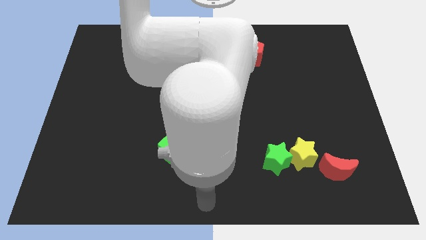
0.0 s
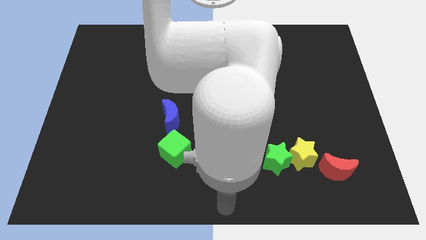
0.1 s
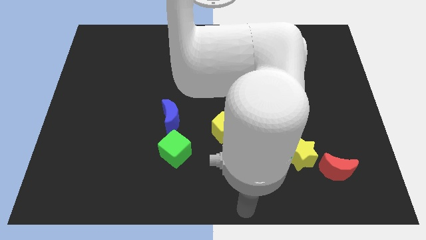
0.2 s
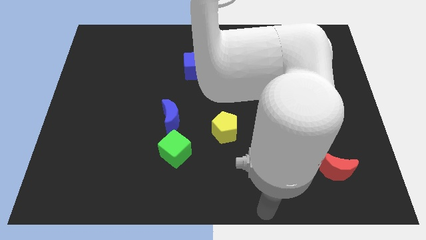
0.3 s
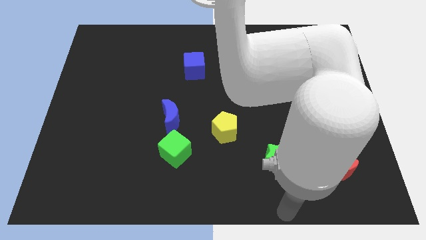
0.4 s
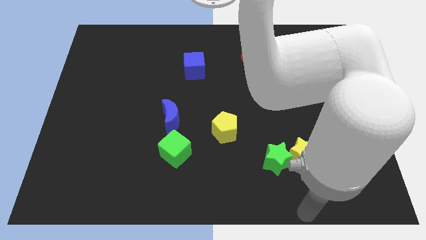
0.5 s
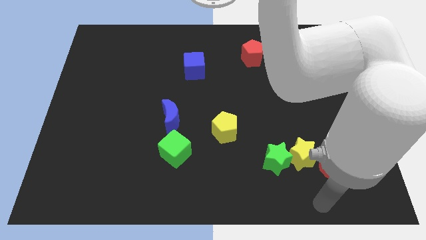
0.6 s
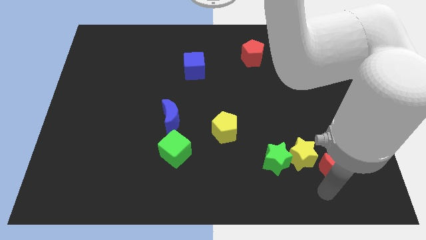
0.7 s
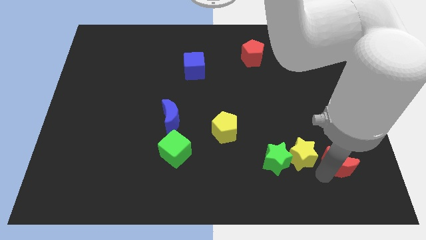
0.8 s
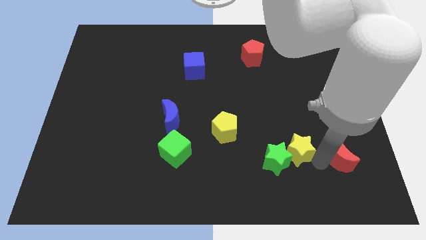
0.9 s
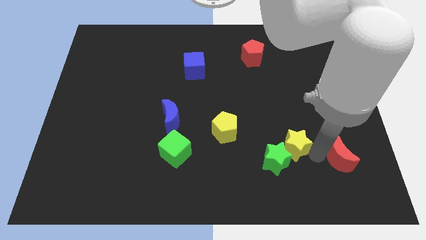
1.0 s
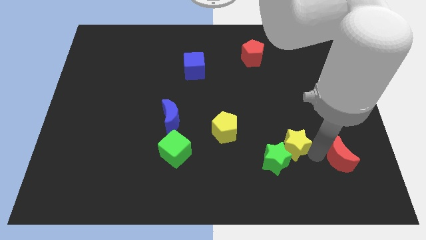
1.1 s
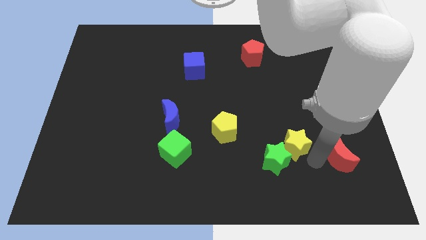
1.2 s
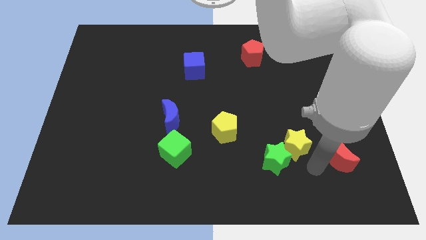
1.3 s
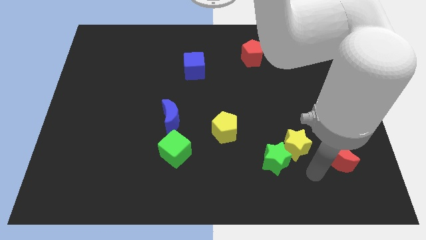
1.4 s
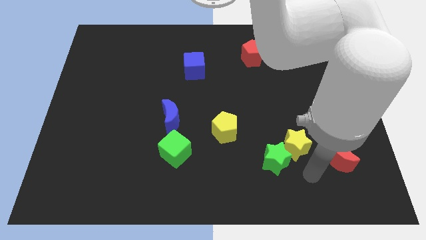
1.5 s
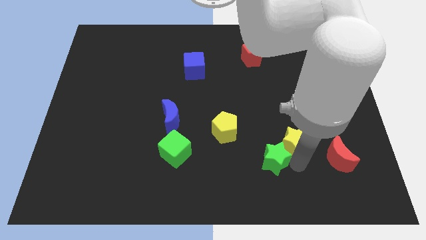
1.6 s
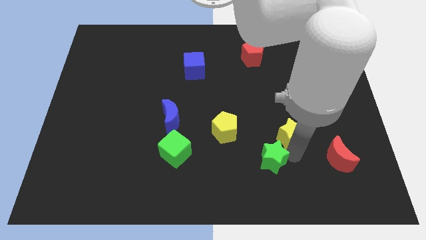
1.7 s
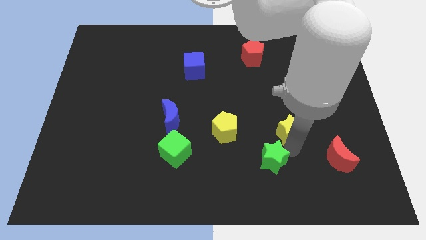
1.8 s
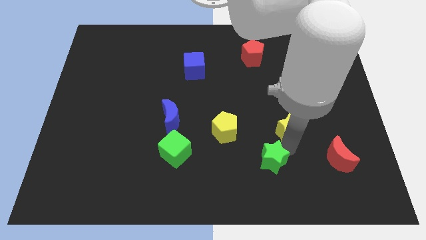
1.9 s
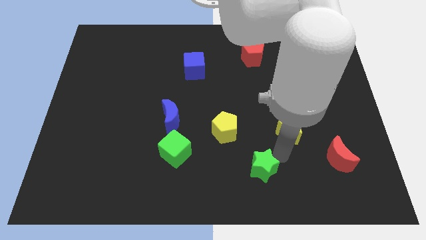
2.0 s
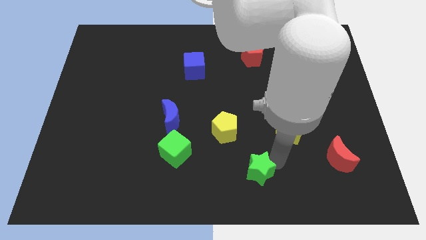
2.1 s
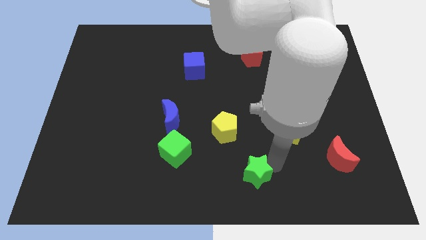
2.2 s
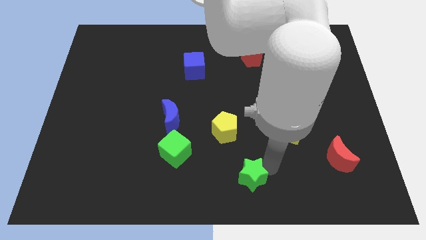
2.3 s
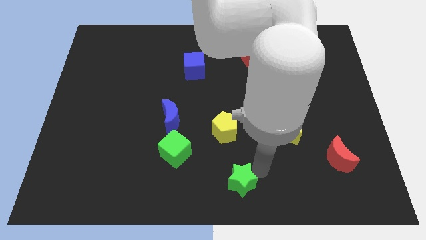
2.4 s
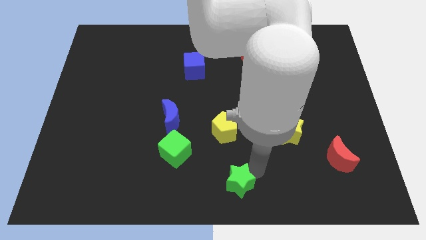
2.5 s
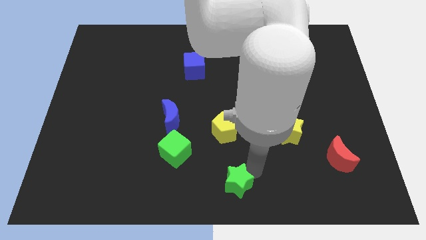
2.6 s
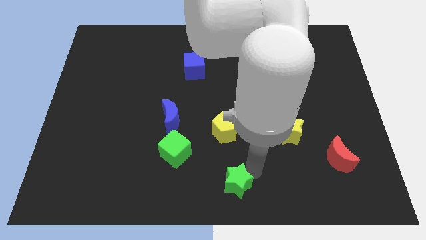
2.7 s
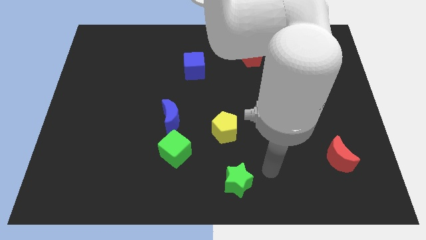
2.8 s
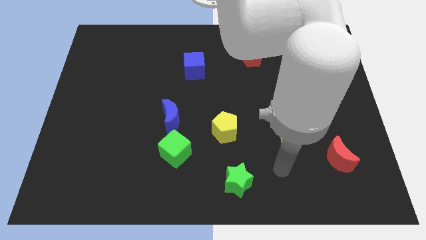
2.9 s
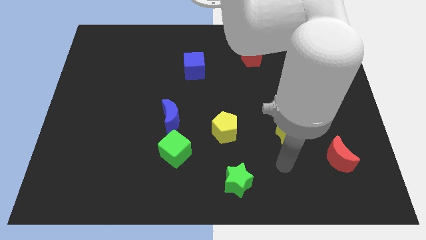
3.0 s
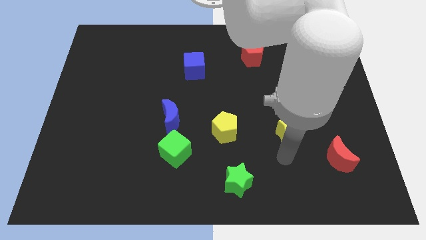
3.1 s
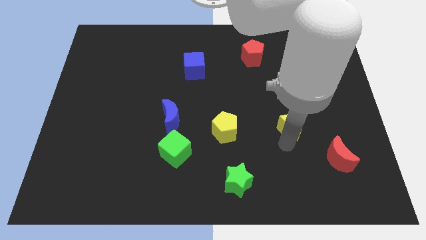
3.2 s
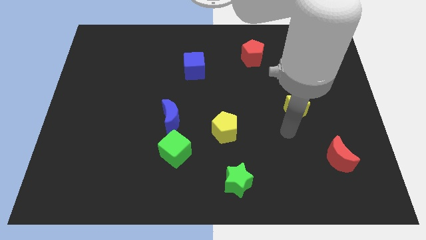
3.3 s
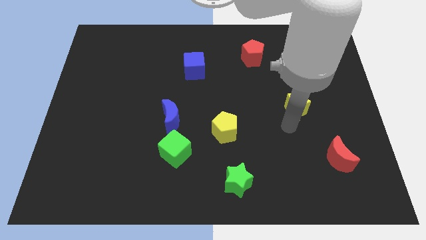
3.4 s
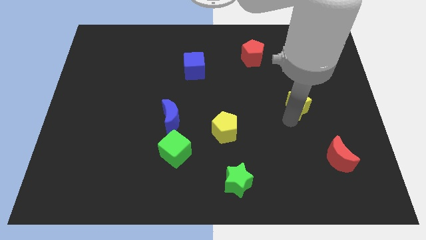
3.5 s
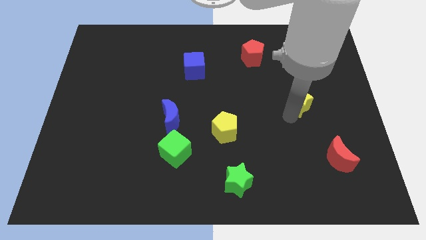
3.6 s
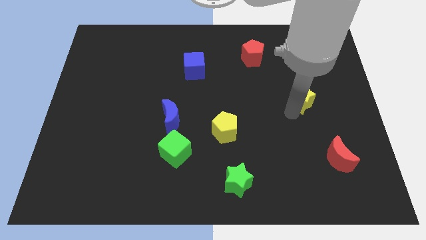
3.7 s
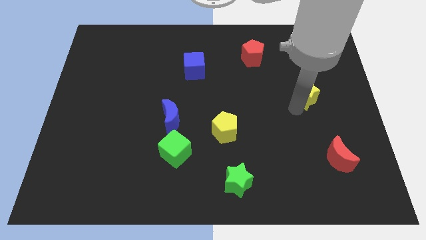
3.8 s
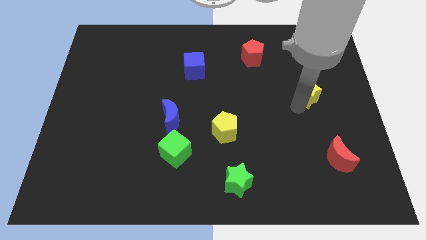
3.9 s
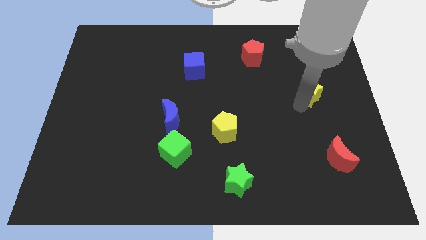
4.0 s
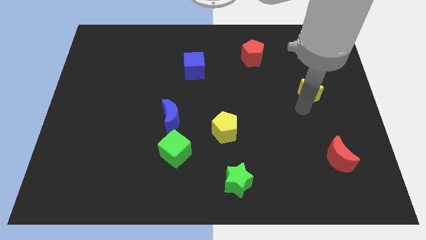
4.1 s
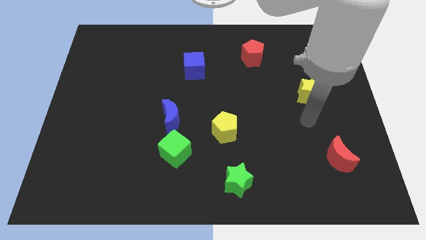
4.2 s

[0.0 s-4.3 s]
place the yellow star diagonal to the red pentagon

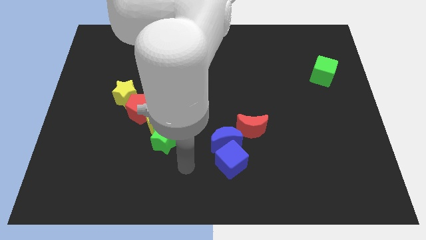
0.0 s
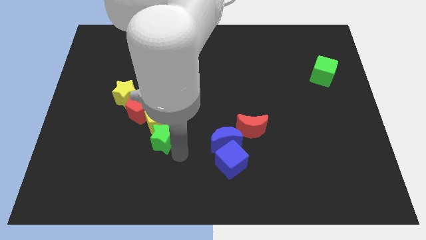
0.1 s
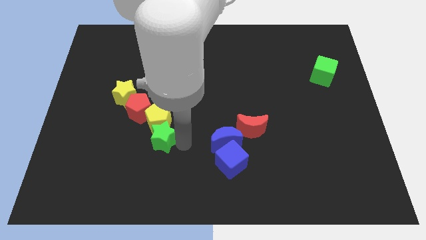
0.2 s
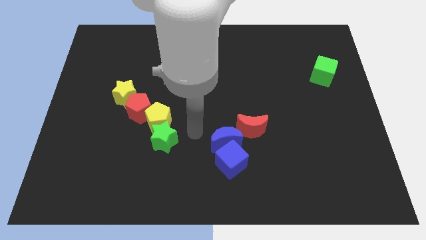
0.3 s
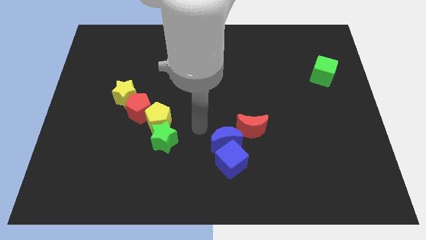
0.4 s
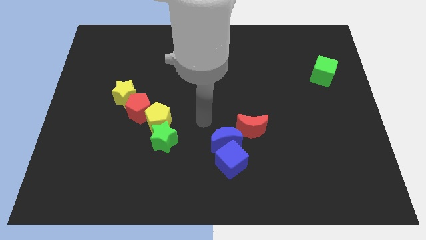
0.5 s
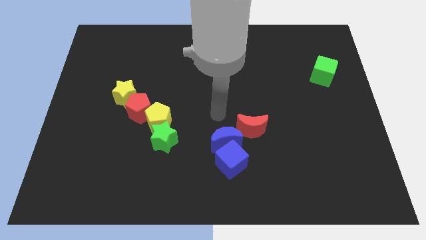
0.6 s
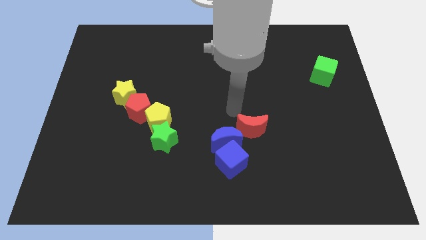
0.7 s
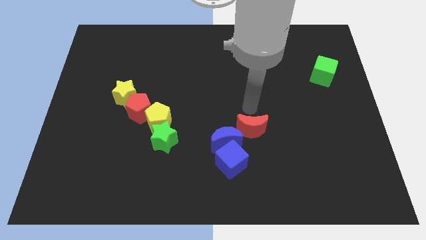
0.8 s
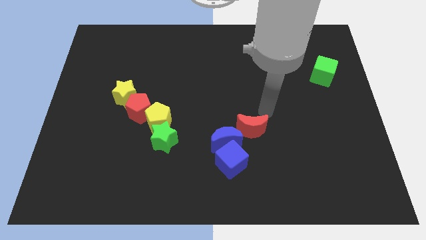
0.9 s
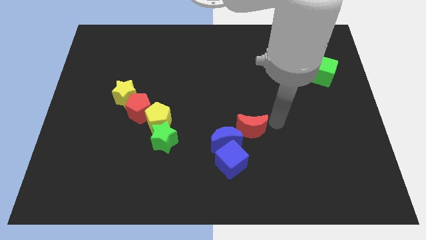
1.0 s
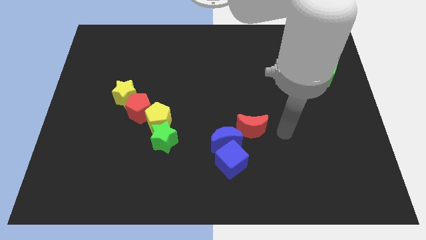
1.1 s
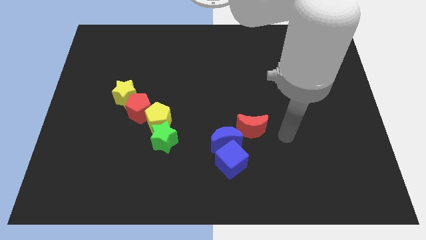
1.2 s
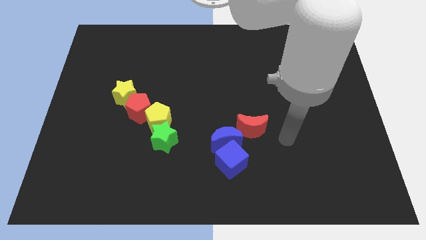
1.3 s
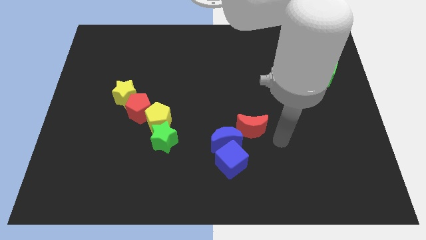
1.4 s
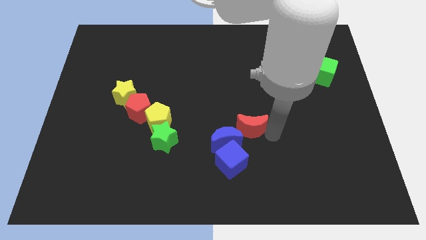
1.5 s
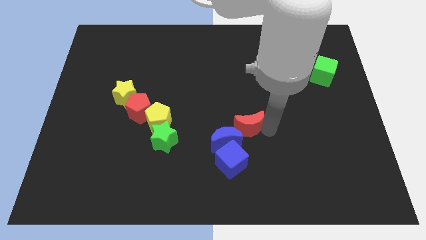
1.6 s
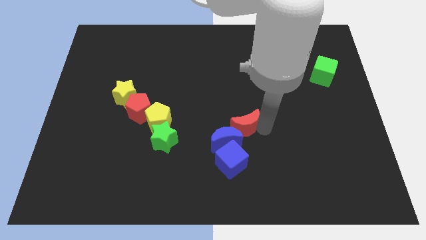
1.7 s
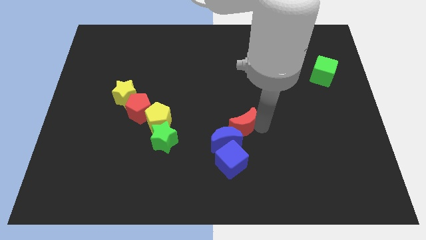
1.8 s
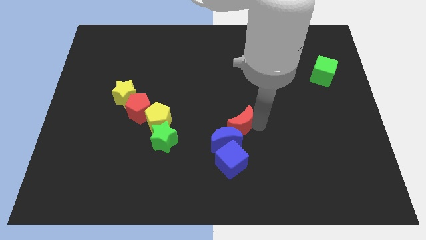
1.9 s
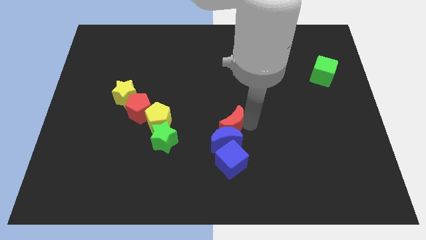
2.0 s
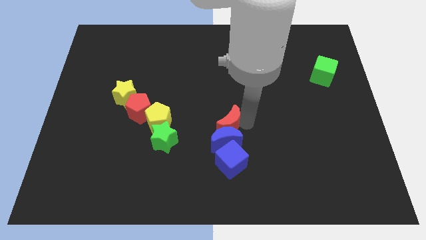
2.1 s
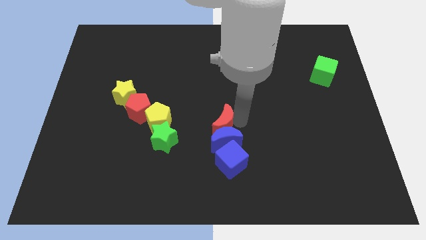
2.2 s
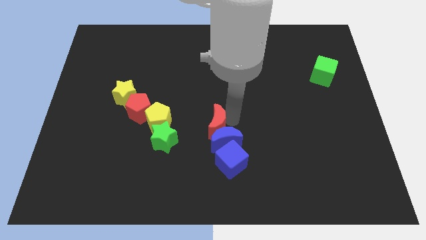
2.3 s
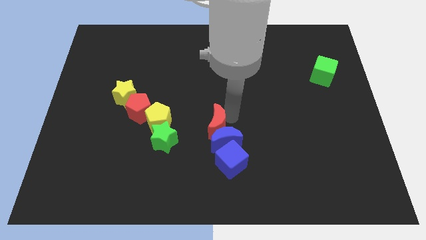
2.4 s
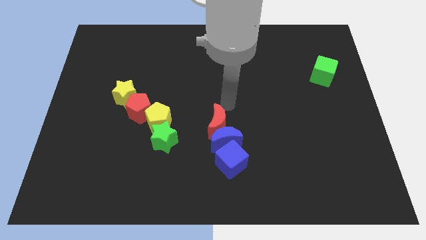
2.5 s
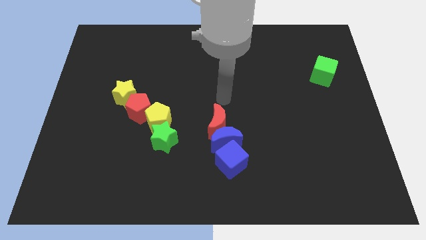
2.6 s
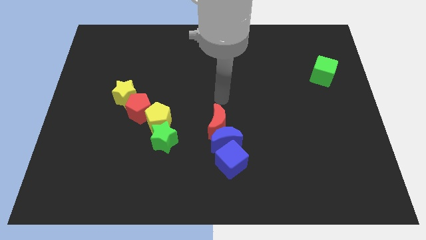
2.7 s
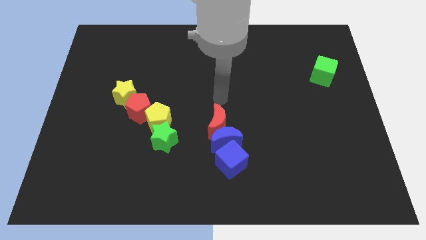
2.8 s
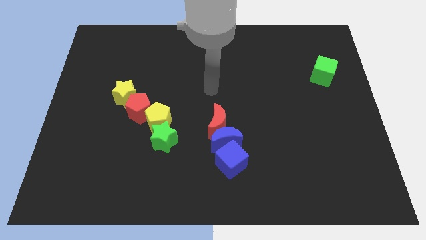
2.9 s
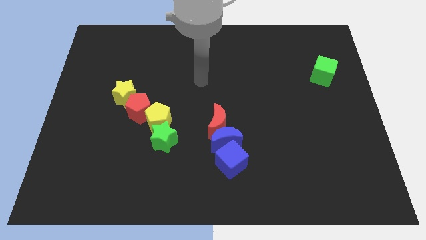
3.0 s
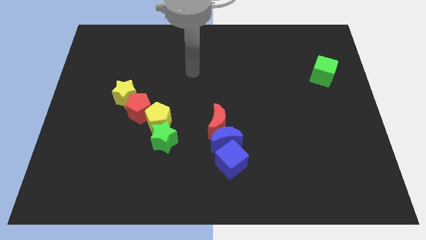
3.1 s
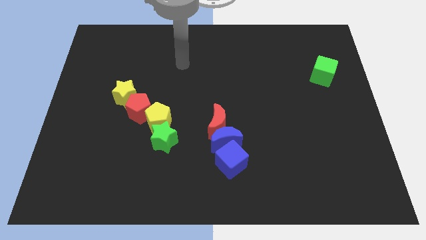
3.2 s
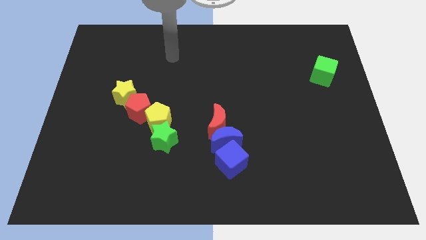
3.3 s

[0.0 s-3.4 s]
move the red crescent to the top of the blue crescent

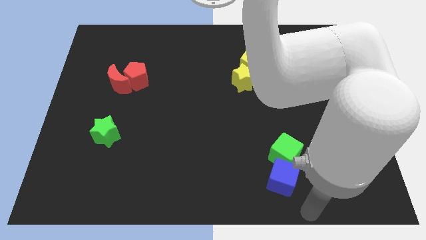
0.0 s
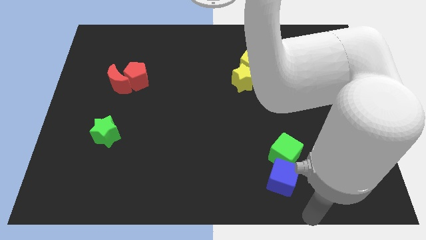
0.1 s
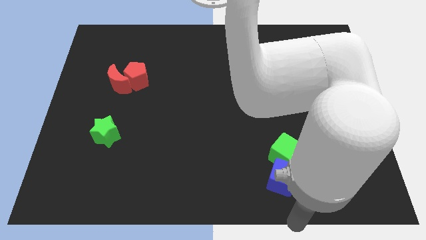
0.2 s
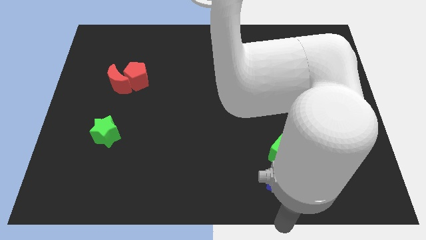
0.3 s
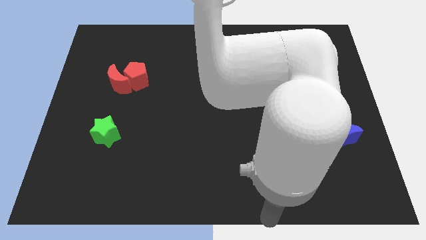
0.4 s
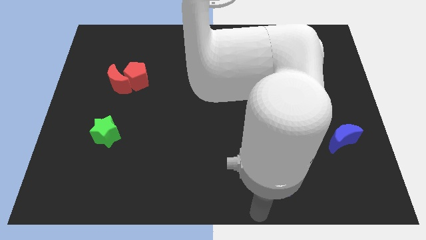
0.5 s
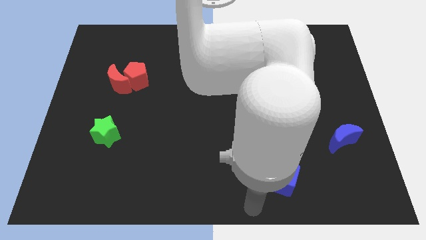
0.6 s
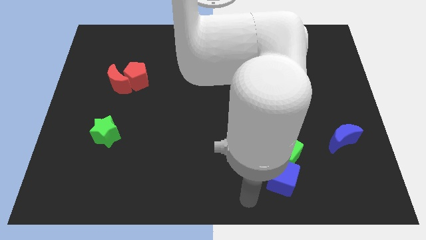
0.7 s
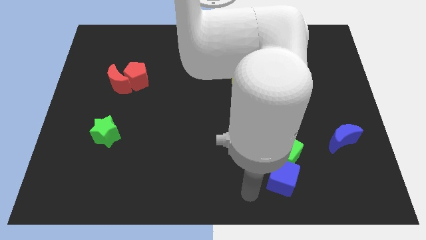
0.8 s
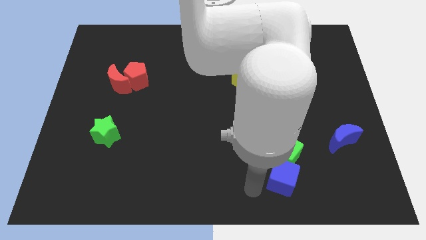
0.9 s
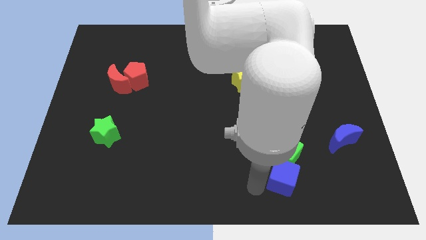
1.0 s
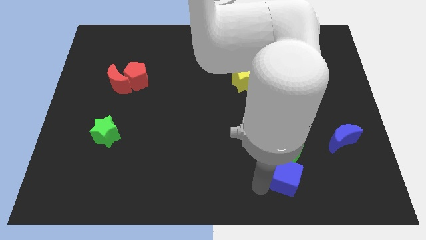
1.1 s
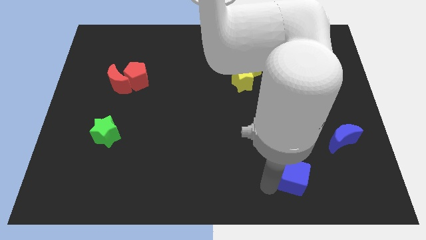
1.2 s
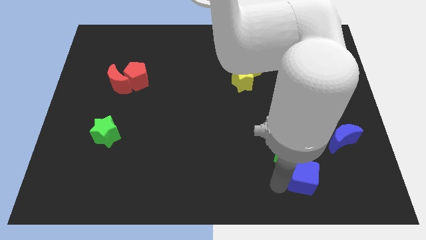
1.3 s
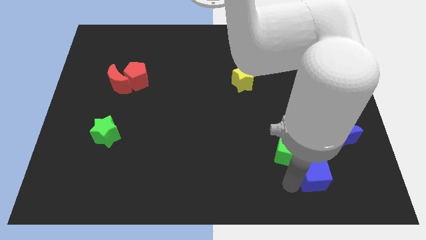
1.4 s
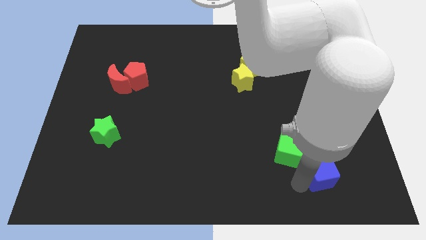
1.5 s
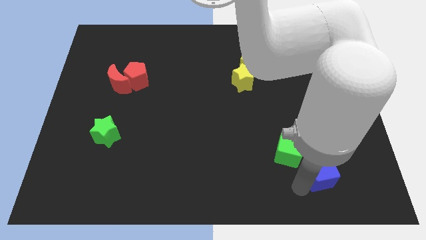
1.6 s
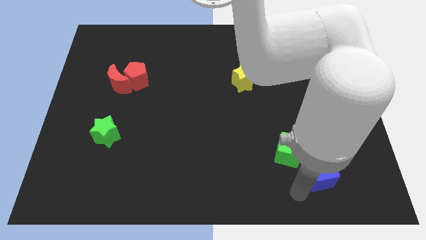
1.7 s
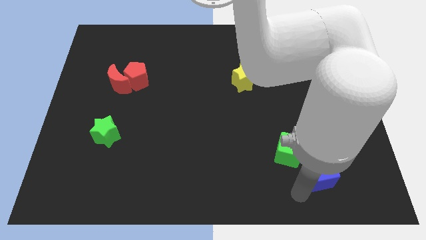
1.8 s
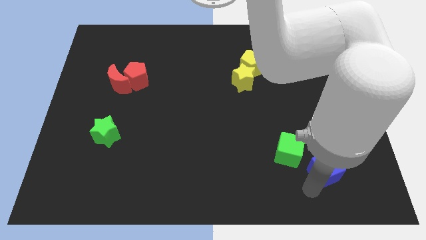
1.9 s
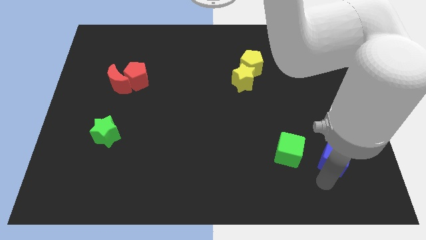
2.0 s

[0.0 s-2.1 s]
separate the blue cube from the green cube
